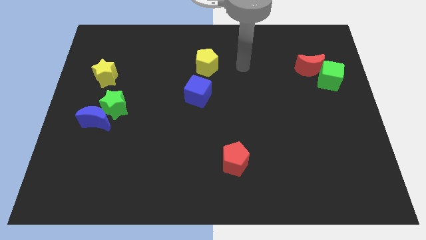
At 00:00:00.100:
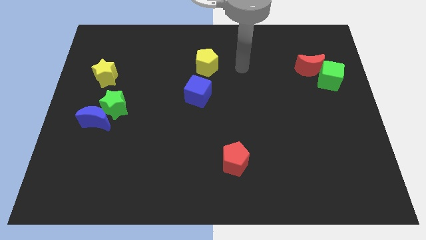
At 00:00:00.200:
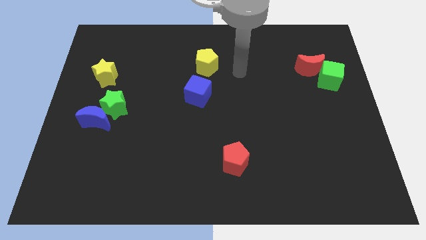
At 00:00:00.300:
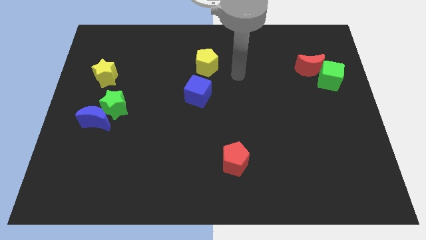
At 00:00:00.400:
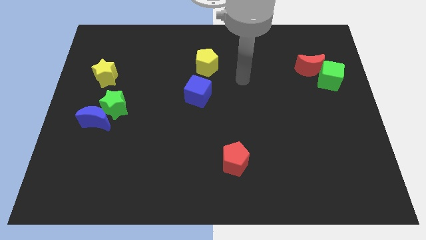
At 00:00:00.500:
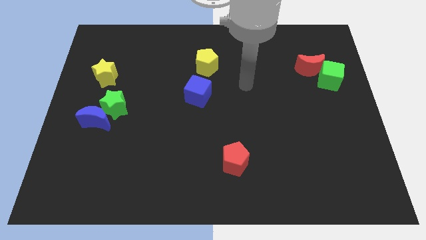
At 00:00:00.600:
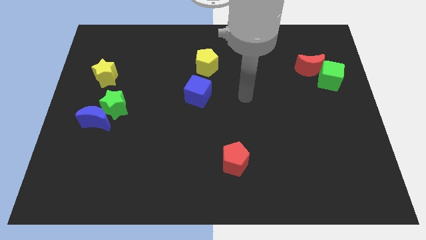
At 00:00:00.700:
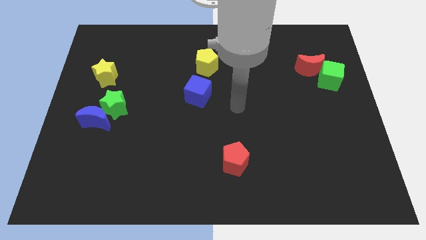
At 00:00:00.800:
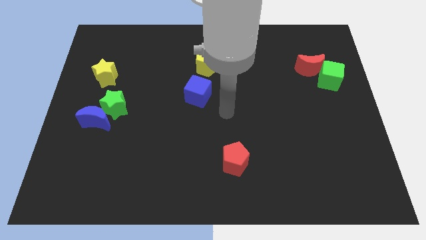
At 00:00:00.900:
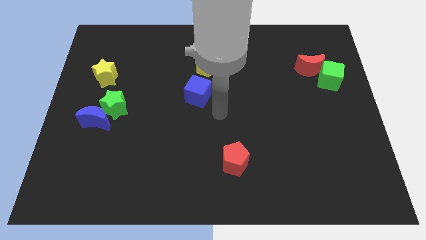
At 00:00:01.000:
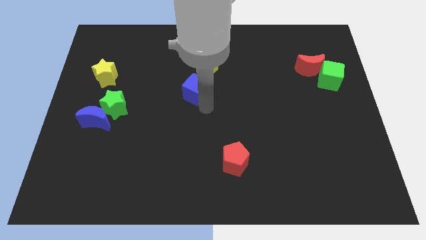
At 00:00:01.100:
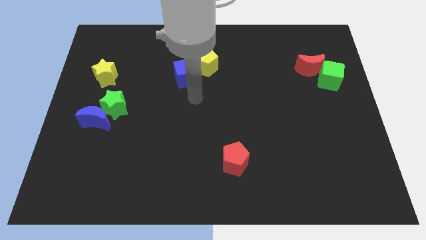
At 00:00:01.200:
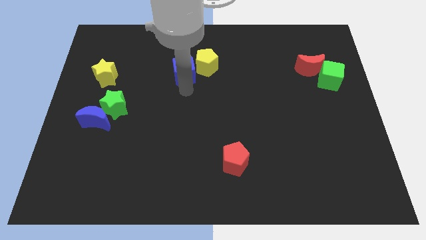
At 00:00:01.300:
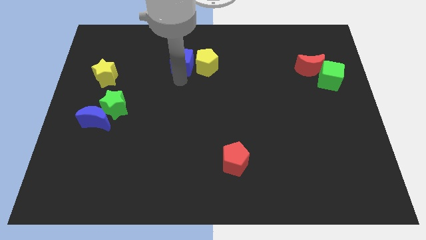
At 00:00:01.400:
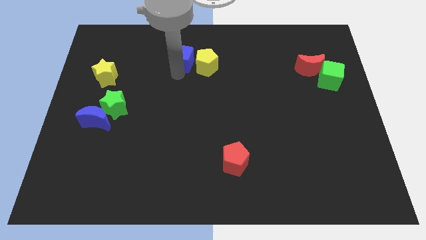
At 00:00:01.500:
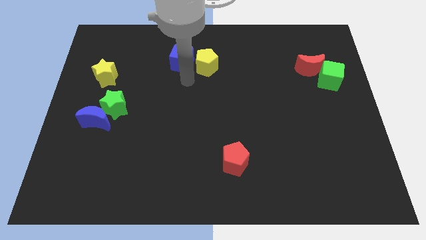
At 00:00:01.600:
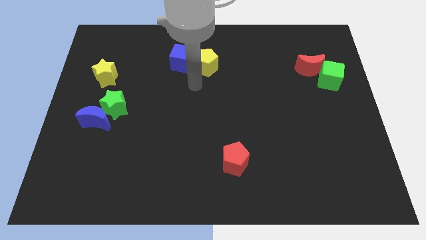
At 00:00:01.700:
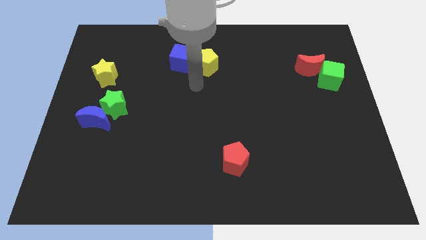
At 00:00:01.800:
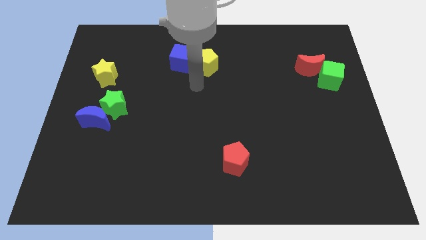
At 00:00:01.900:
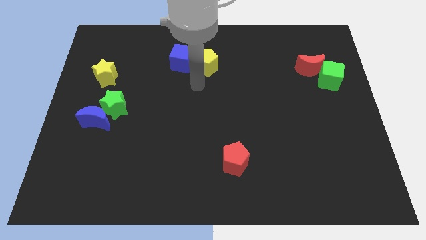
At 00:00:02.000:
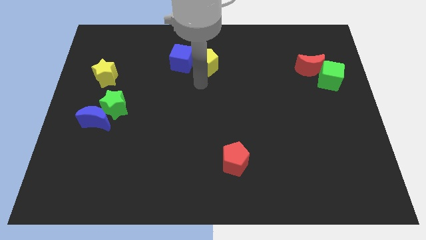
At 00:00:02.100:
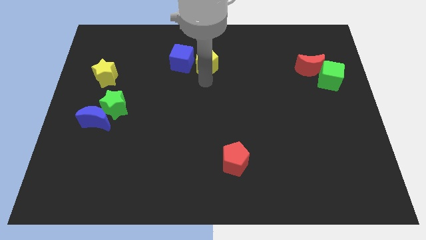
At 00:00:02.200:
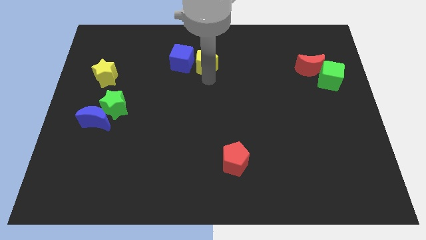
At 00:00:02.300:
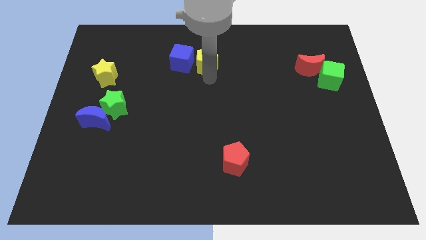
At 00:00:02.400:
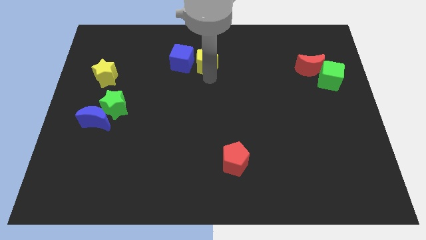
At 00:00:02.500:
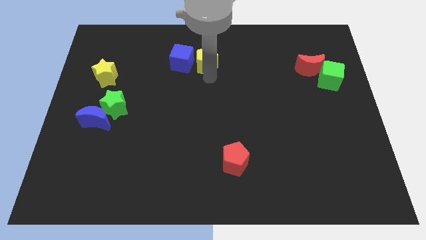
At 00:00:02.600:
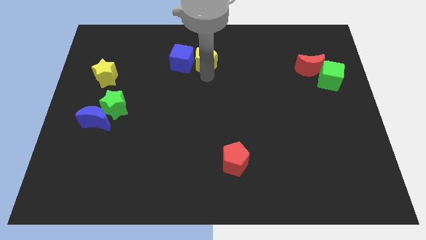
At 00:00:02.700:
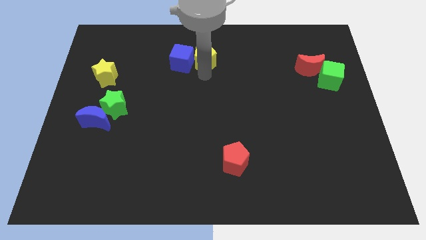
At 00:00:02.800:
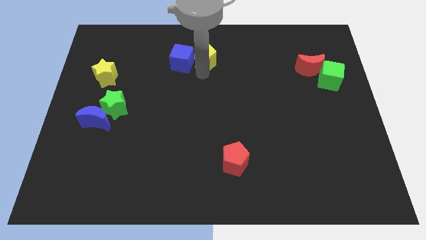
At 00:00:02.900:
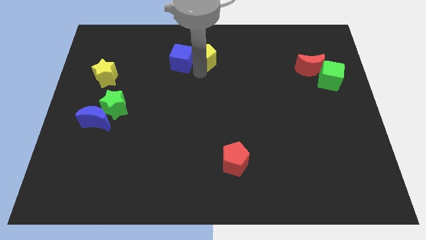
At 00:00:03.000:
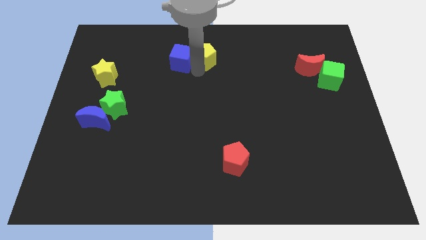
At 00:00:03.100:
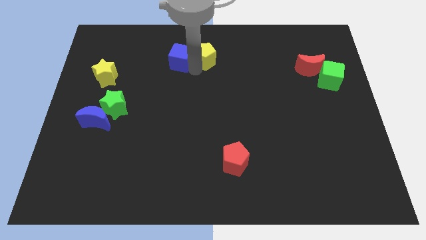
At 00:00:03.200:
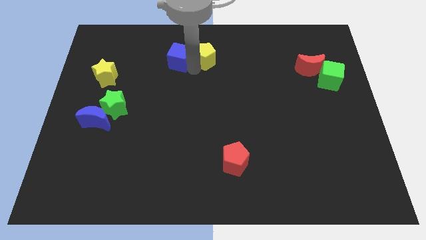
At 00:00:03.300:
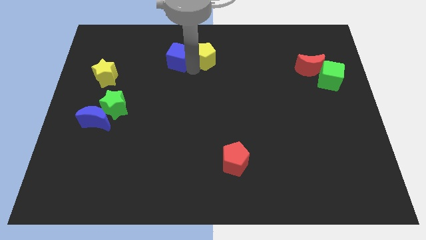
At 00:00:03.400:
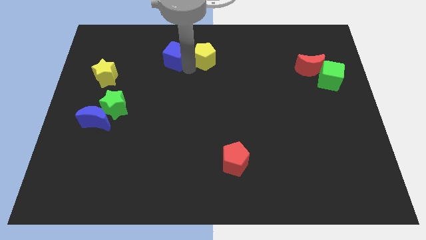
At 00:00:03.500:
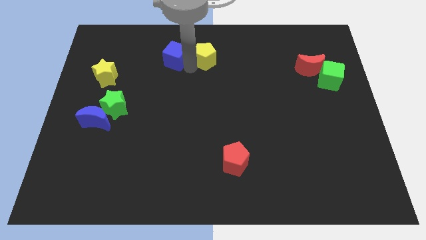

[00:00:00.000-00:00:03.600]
place the blue cube to the left of yellow pentagon

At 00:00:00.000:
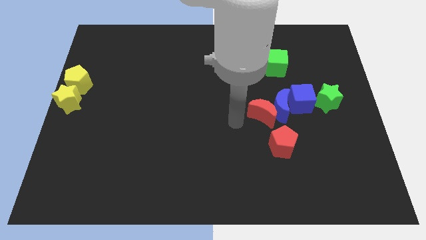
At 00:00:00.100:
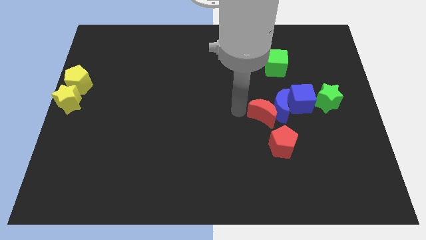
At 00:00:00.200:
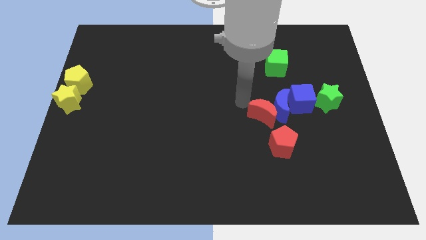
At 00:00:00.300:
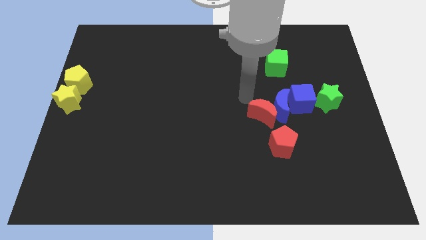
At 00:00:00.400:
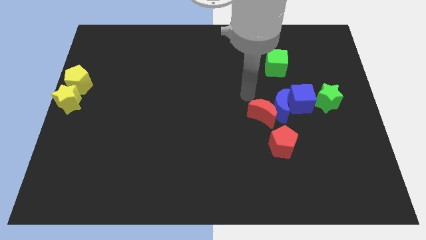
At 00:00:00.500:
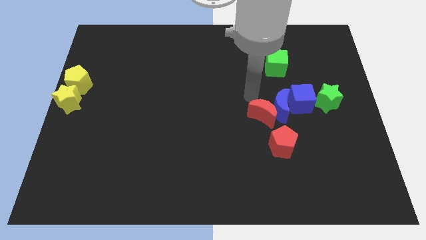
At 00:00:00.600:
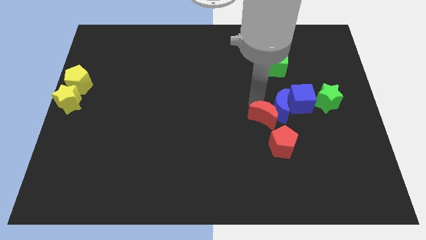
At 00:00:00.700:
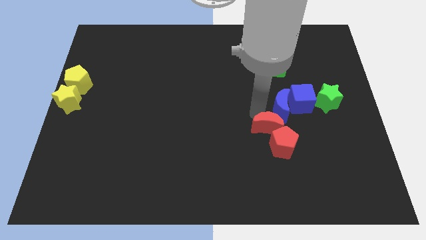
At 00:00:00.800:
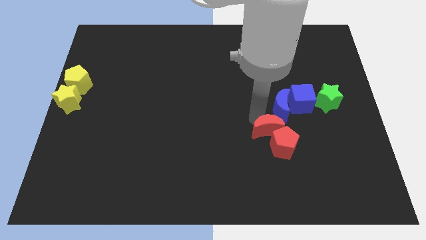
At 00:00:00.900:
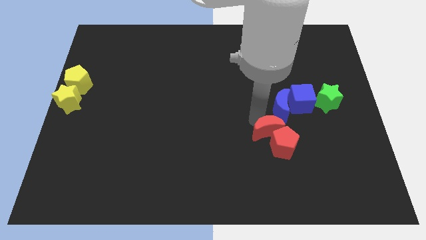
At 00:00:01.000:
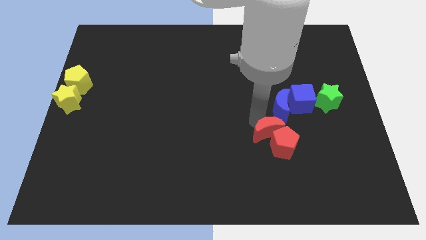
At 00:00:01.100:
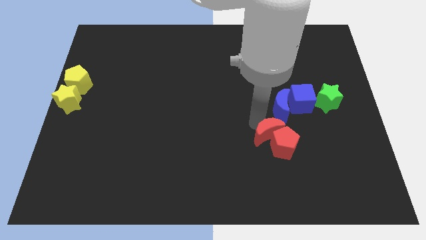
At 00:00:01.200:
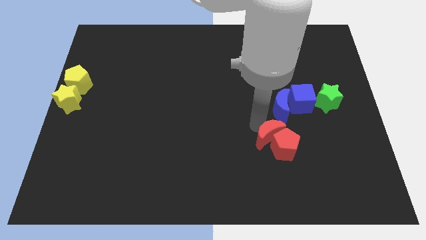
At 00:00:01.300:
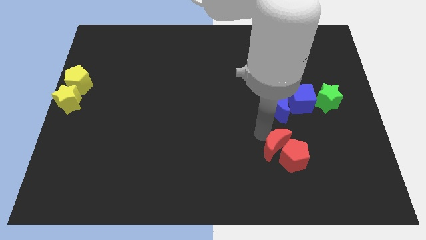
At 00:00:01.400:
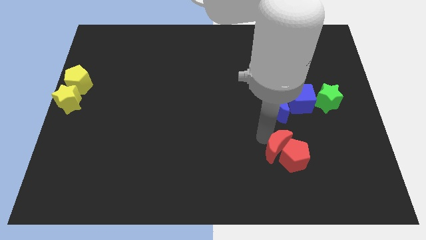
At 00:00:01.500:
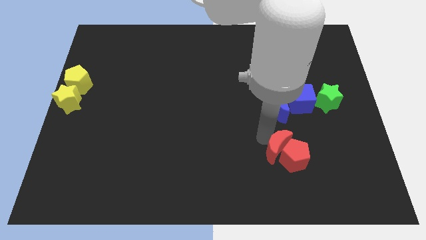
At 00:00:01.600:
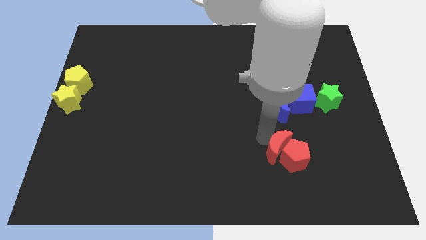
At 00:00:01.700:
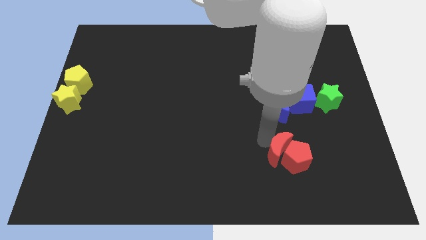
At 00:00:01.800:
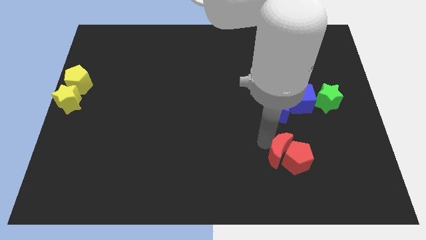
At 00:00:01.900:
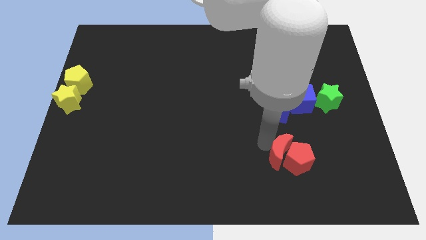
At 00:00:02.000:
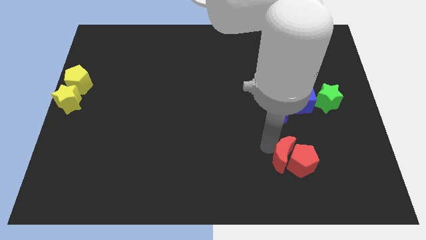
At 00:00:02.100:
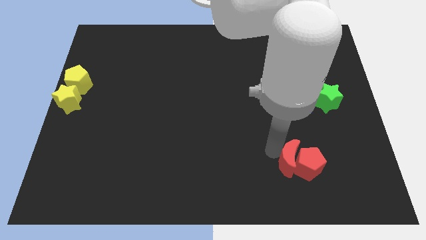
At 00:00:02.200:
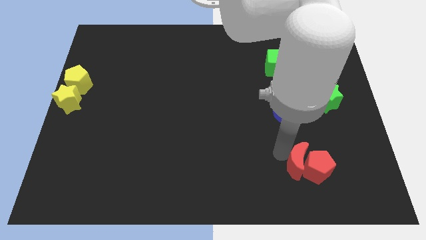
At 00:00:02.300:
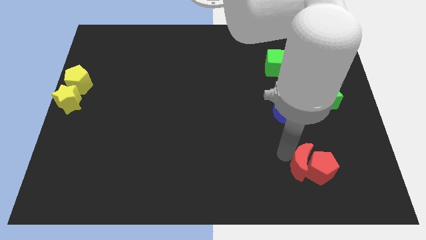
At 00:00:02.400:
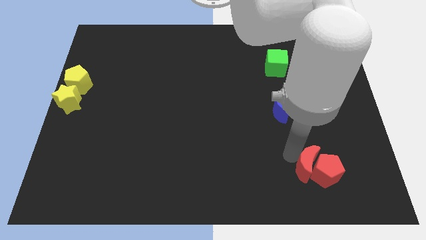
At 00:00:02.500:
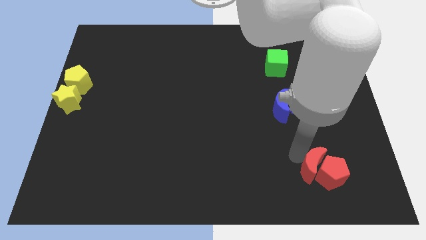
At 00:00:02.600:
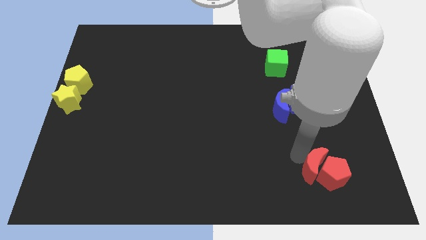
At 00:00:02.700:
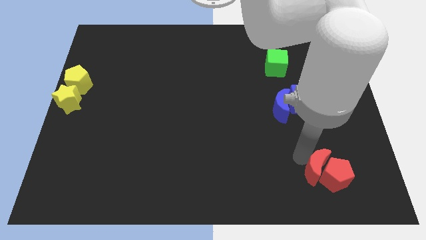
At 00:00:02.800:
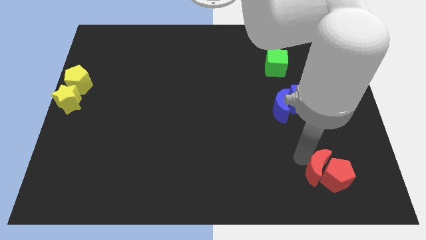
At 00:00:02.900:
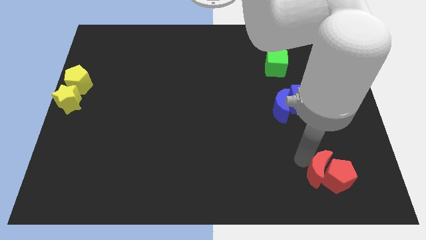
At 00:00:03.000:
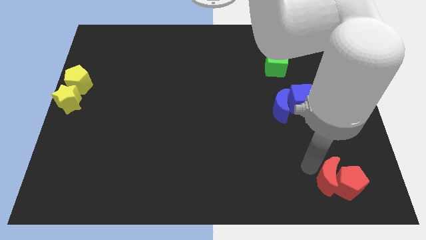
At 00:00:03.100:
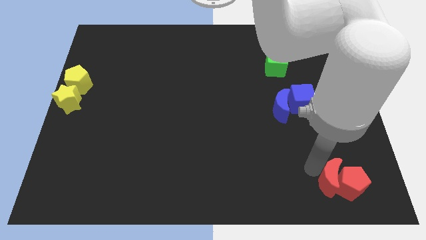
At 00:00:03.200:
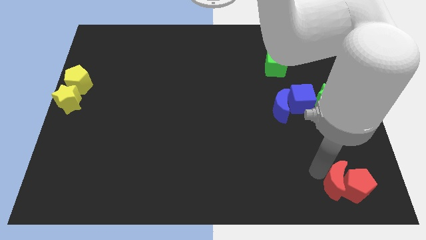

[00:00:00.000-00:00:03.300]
move the red blocks to the bottom right side of the board

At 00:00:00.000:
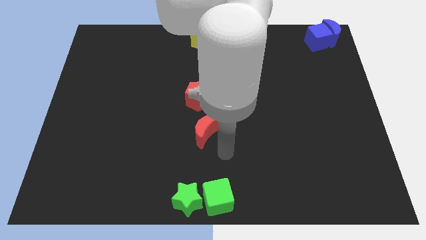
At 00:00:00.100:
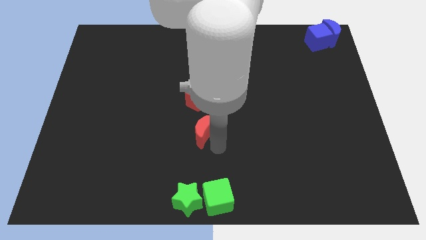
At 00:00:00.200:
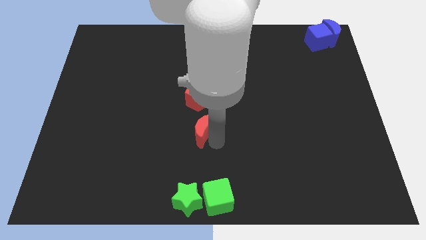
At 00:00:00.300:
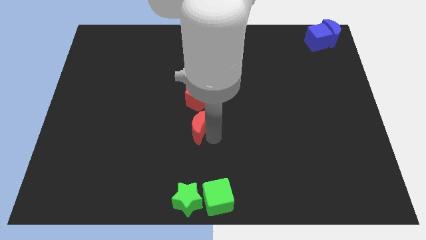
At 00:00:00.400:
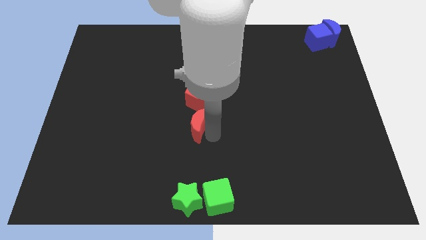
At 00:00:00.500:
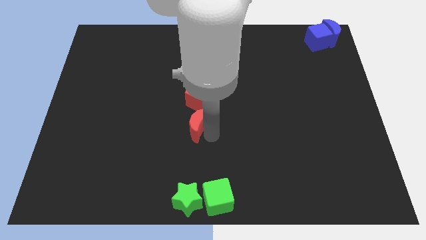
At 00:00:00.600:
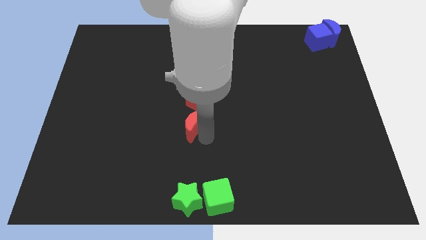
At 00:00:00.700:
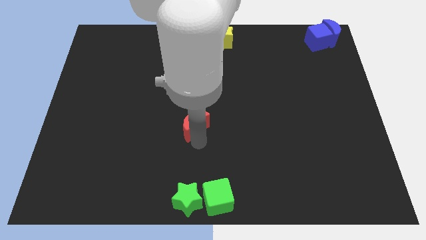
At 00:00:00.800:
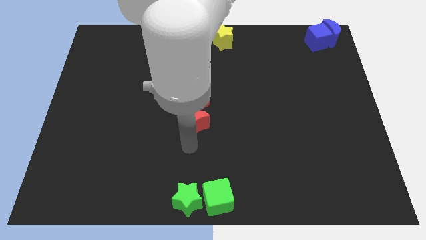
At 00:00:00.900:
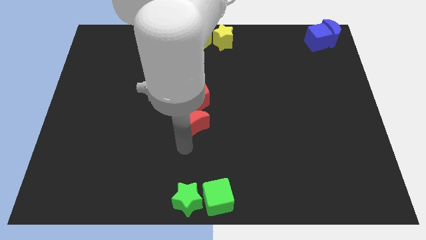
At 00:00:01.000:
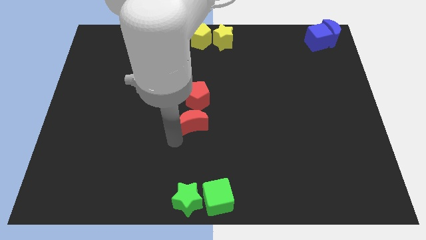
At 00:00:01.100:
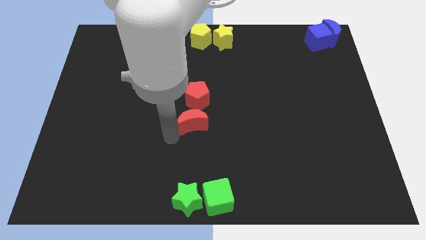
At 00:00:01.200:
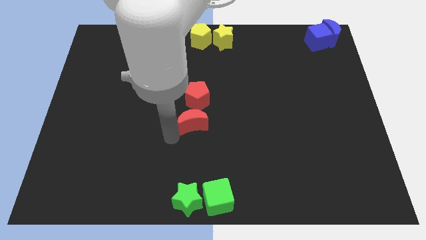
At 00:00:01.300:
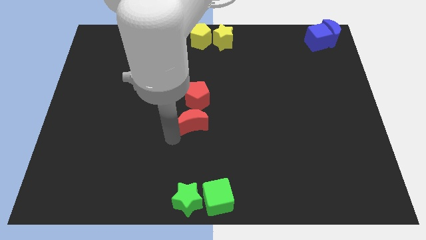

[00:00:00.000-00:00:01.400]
move the red moon to the bottom of red pentagon

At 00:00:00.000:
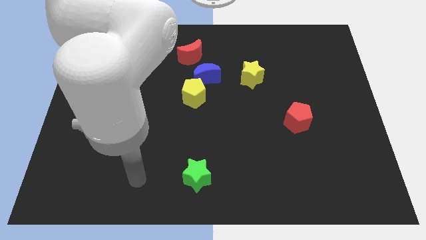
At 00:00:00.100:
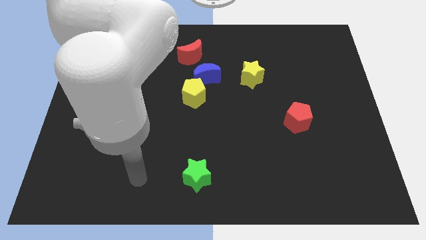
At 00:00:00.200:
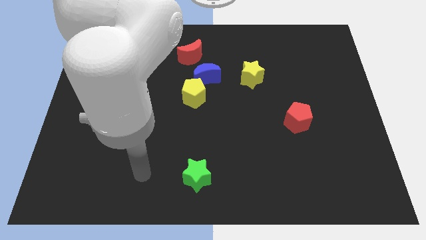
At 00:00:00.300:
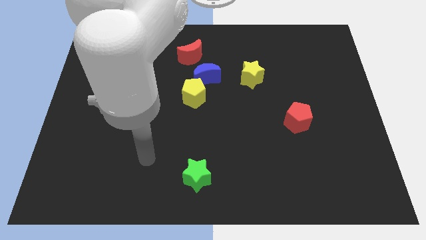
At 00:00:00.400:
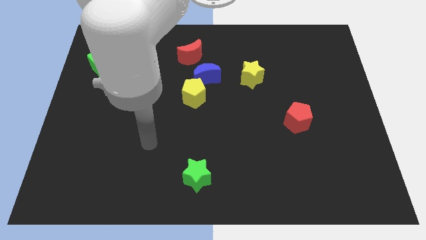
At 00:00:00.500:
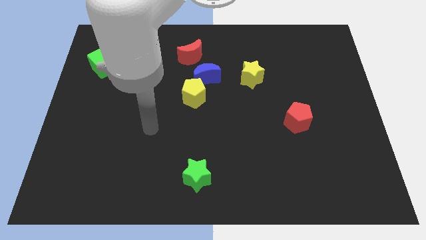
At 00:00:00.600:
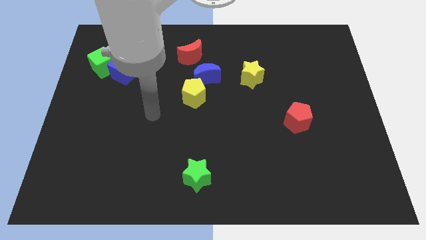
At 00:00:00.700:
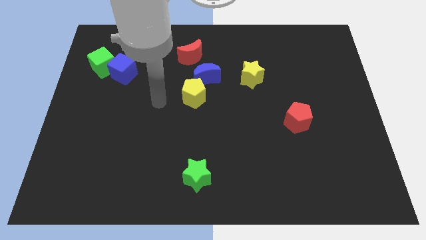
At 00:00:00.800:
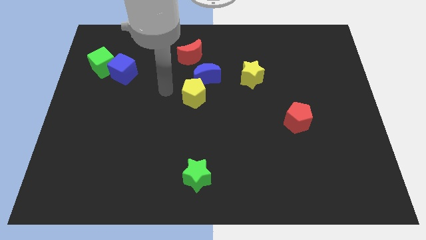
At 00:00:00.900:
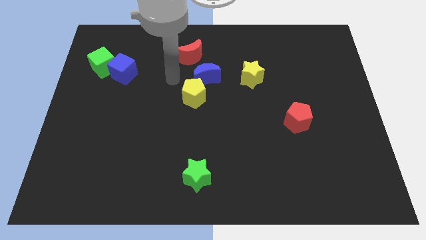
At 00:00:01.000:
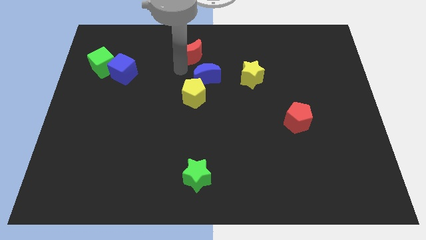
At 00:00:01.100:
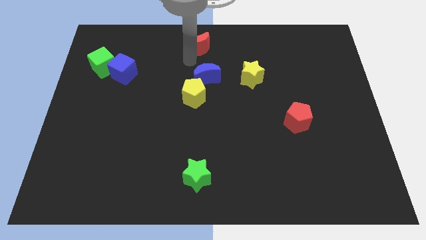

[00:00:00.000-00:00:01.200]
move your hand towards the red crescent
